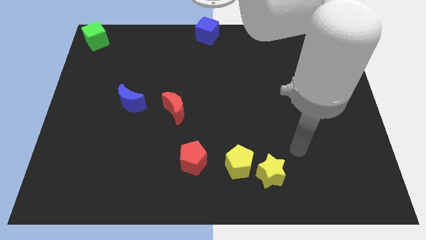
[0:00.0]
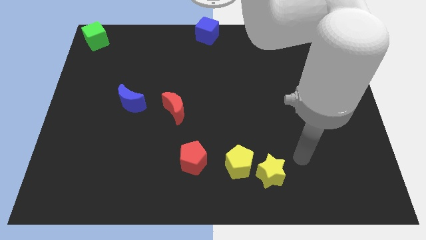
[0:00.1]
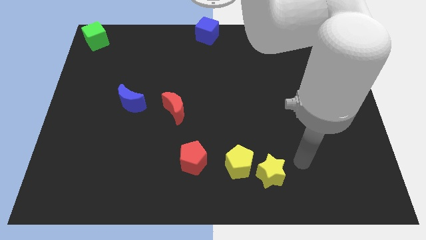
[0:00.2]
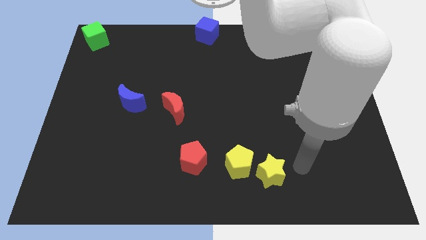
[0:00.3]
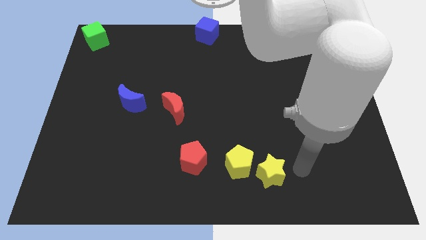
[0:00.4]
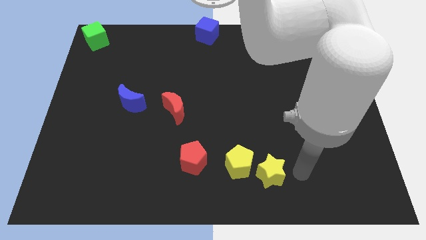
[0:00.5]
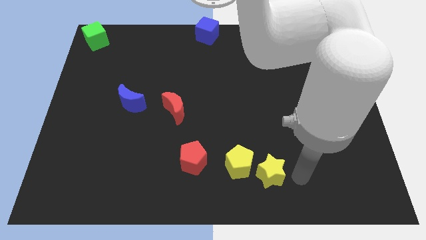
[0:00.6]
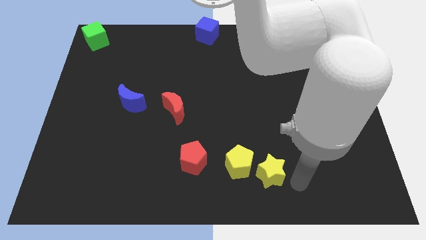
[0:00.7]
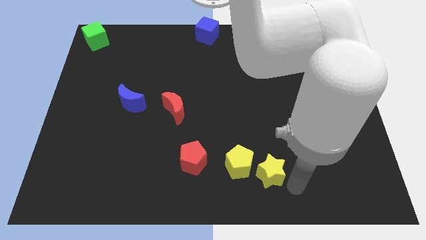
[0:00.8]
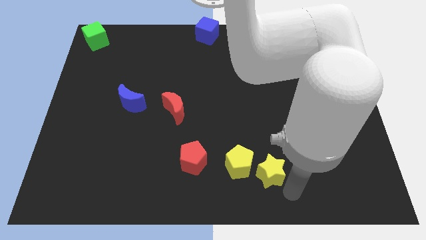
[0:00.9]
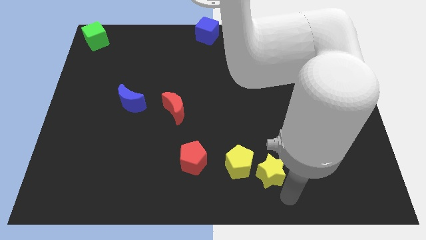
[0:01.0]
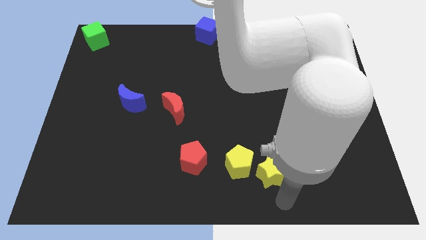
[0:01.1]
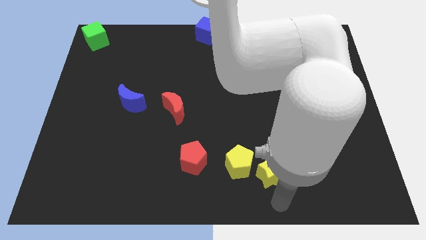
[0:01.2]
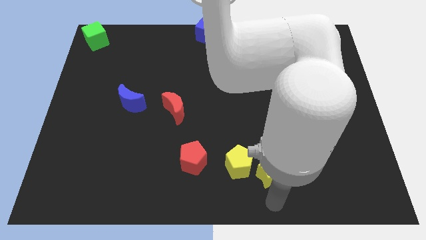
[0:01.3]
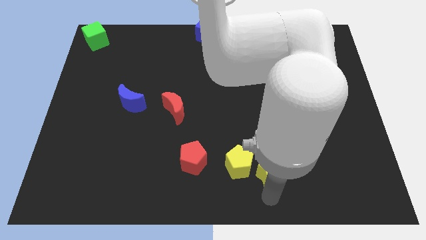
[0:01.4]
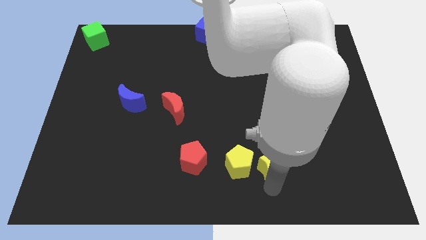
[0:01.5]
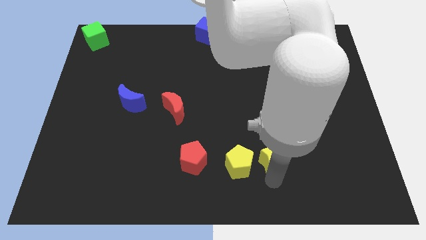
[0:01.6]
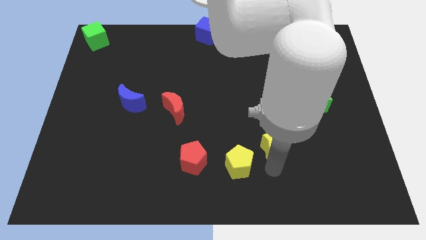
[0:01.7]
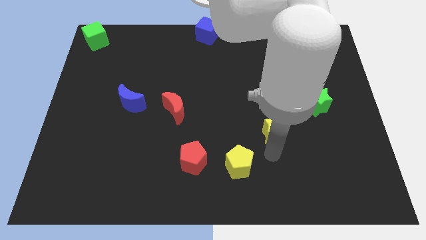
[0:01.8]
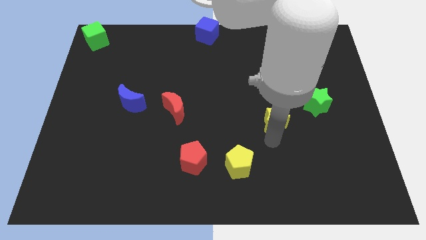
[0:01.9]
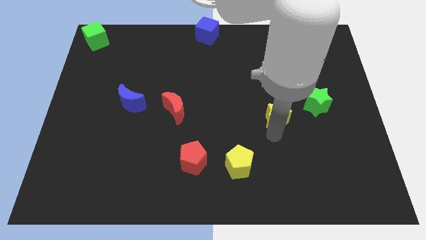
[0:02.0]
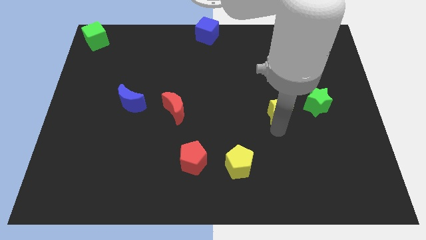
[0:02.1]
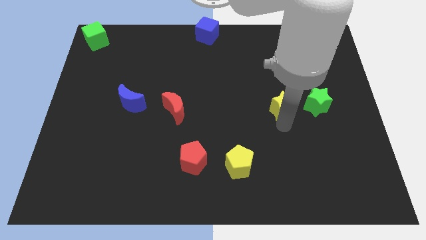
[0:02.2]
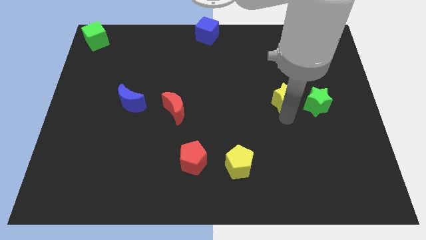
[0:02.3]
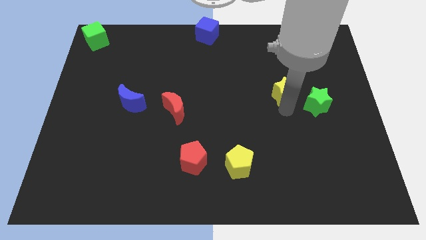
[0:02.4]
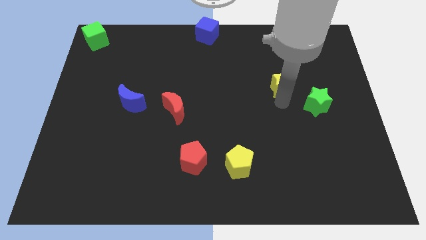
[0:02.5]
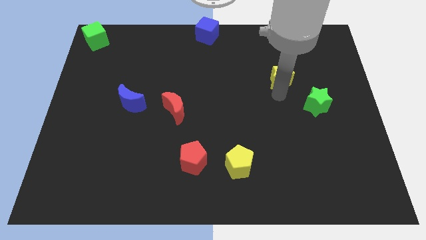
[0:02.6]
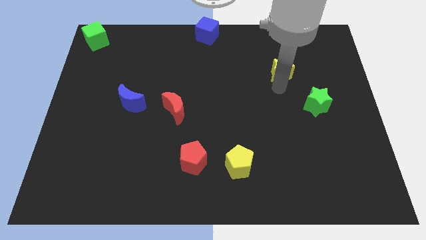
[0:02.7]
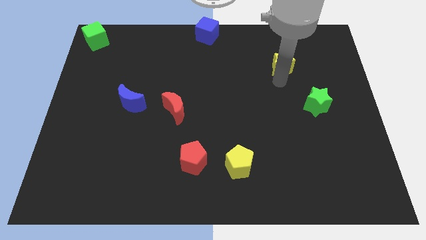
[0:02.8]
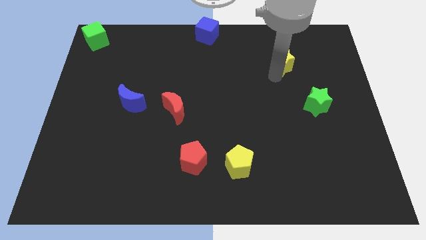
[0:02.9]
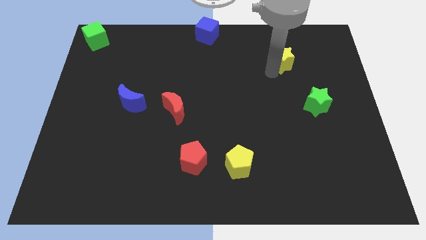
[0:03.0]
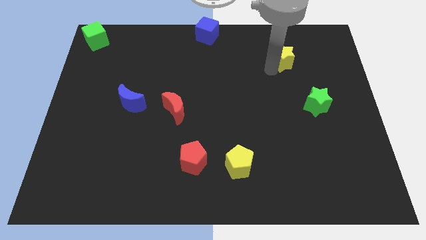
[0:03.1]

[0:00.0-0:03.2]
place the yellow star in between the blue cube and green star

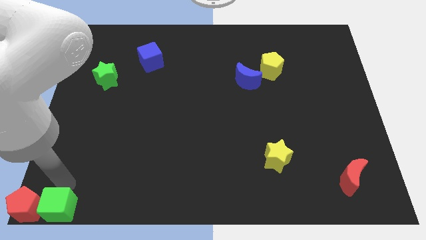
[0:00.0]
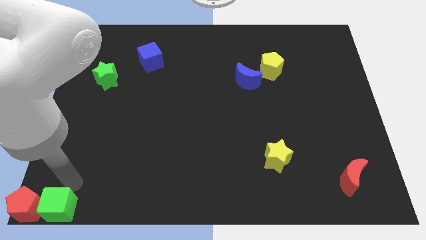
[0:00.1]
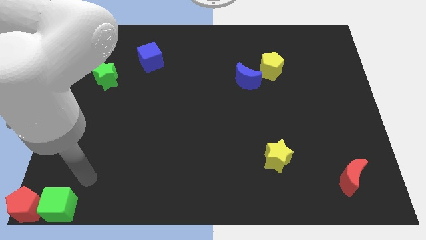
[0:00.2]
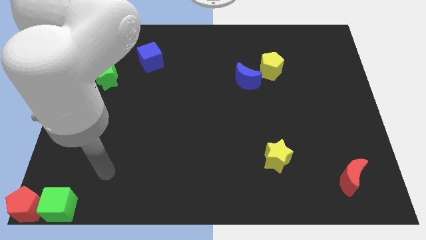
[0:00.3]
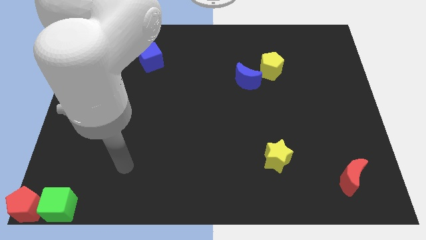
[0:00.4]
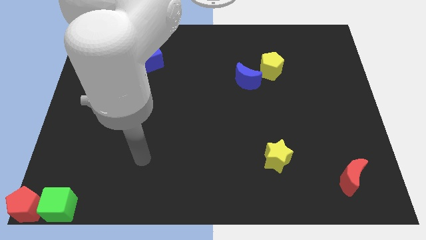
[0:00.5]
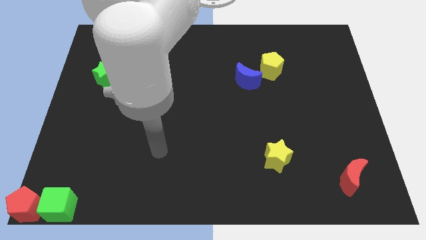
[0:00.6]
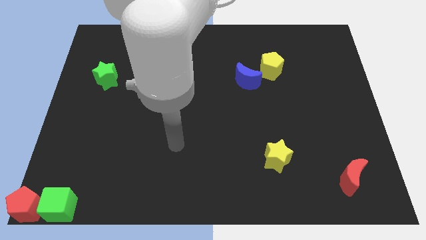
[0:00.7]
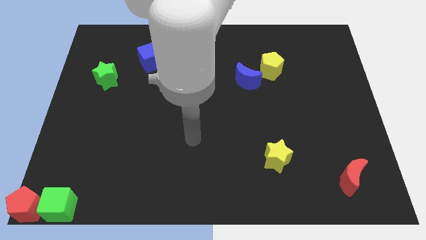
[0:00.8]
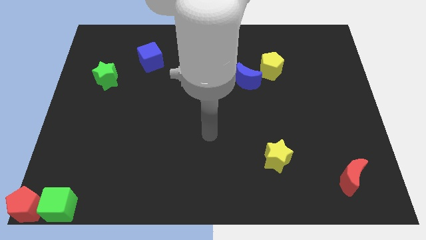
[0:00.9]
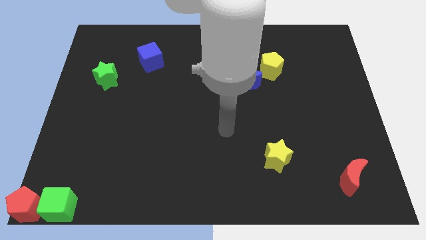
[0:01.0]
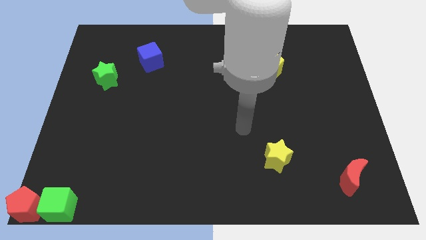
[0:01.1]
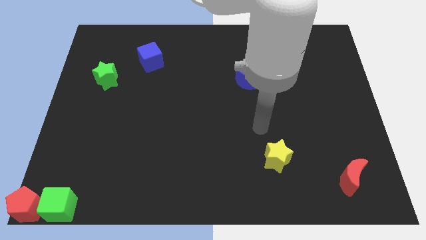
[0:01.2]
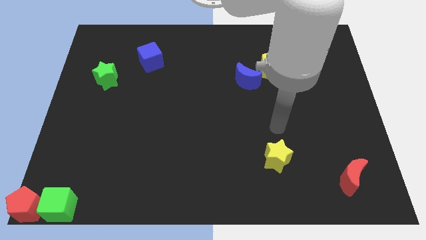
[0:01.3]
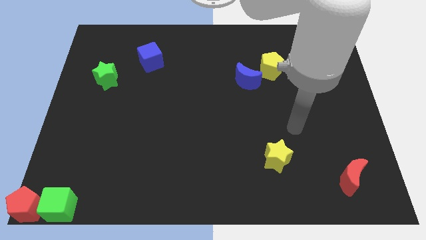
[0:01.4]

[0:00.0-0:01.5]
move your arm away from the green cube

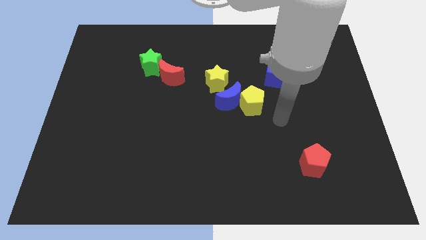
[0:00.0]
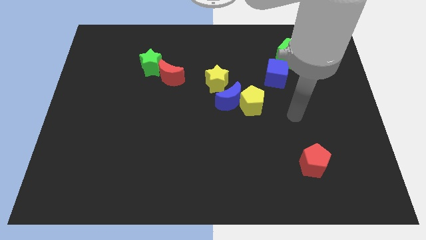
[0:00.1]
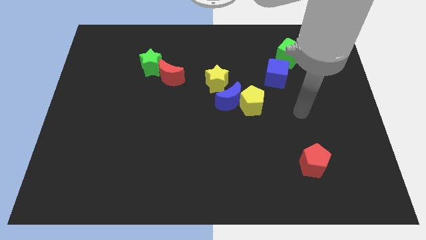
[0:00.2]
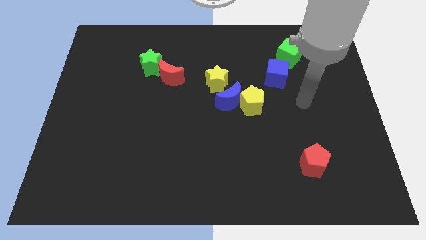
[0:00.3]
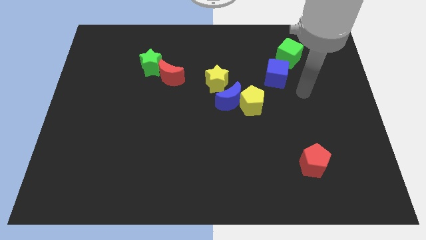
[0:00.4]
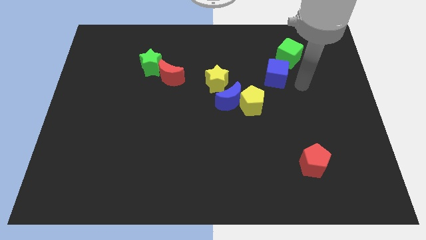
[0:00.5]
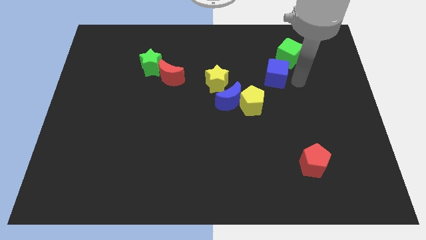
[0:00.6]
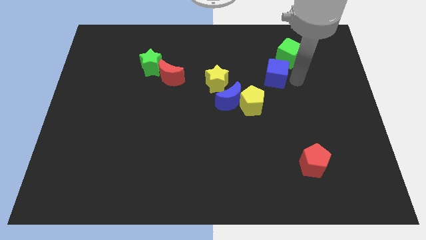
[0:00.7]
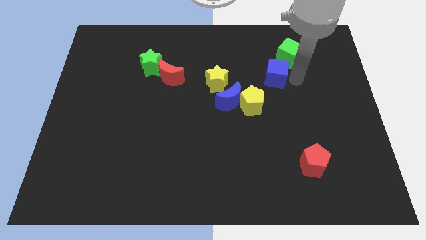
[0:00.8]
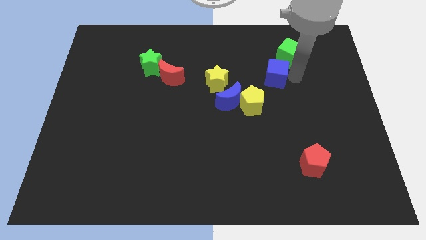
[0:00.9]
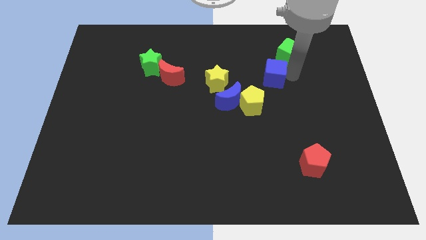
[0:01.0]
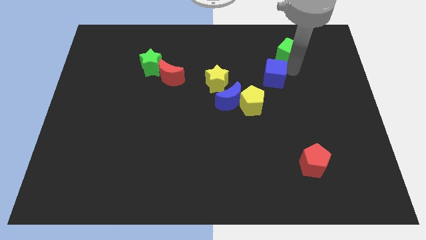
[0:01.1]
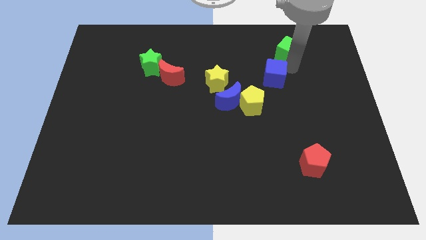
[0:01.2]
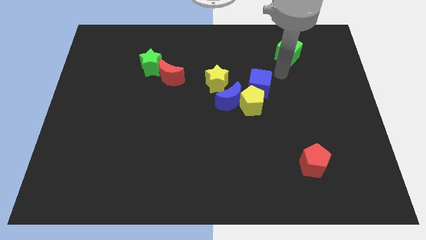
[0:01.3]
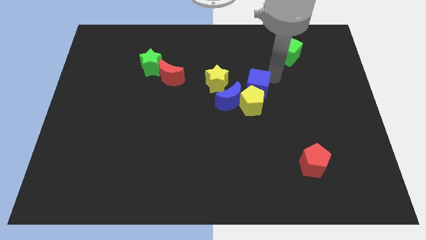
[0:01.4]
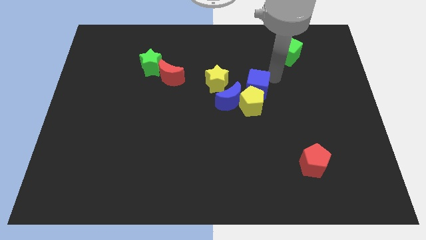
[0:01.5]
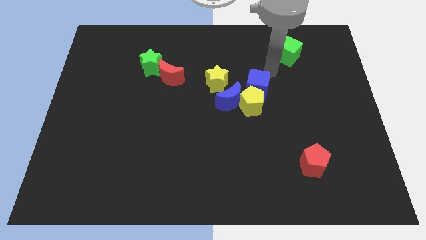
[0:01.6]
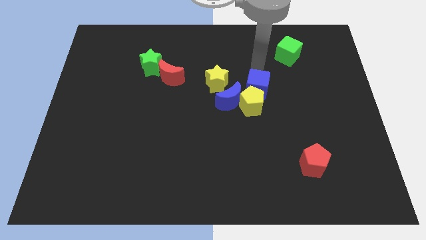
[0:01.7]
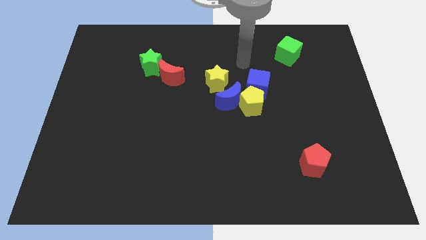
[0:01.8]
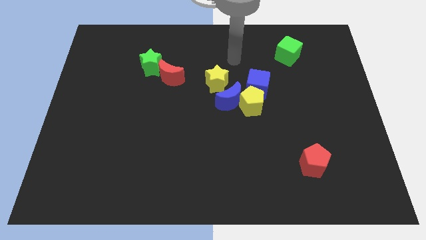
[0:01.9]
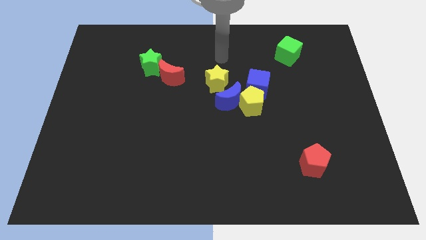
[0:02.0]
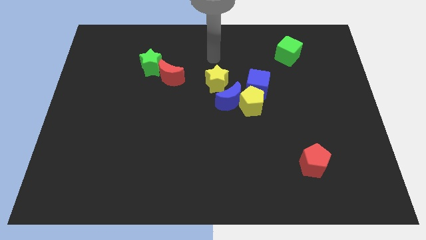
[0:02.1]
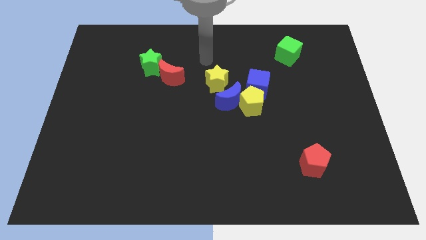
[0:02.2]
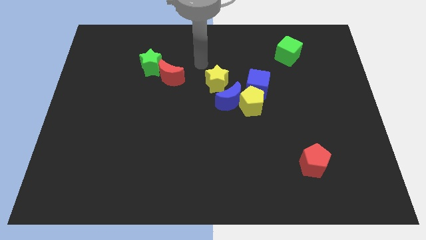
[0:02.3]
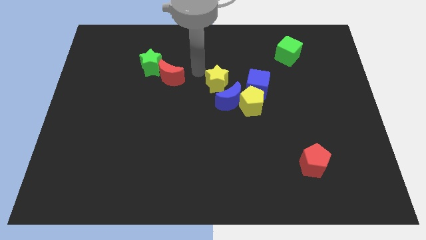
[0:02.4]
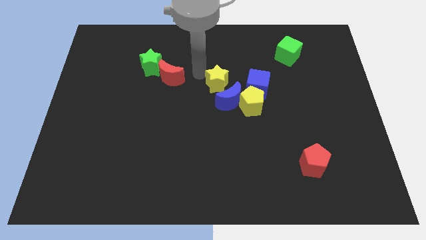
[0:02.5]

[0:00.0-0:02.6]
separate the blue cube from the green cube

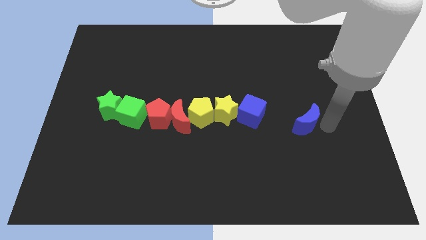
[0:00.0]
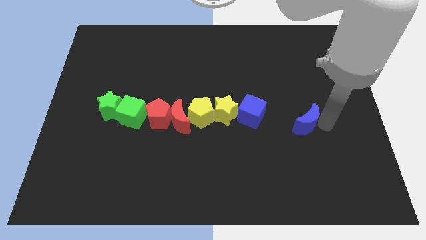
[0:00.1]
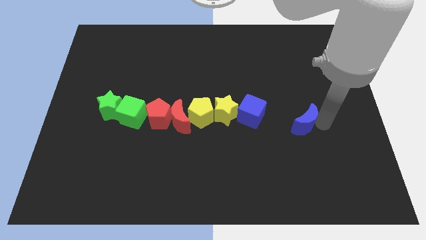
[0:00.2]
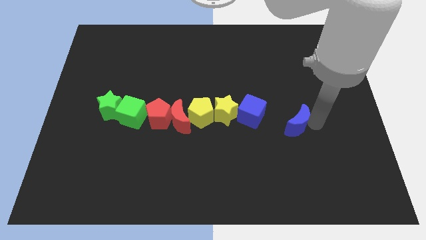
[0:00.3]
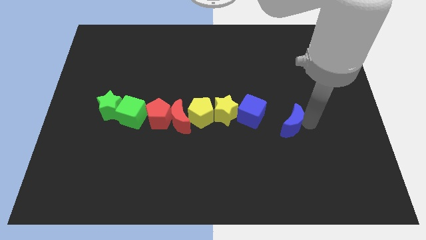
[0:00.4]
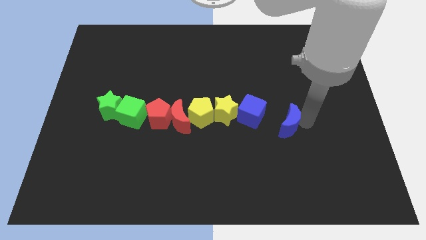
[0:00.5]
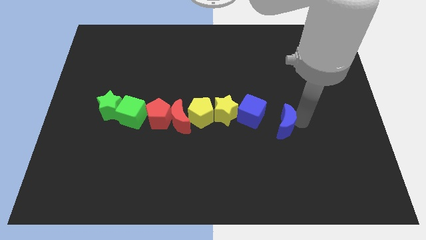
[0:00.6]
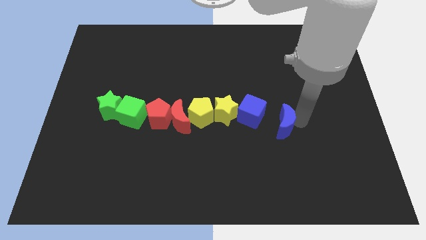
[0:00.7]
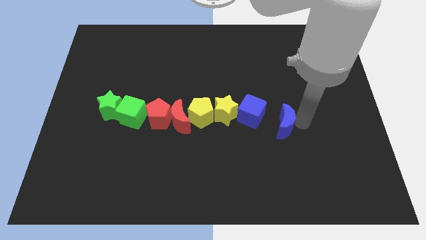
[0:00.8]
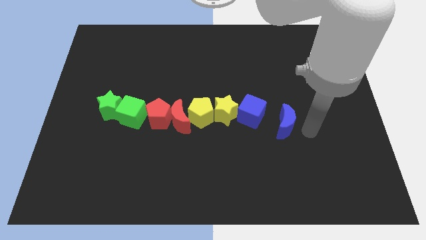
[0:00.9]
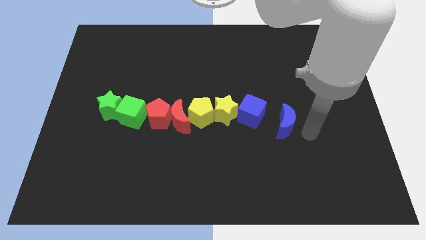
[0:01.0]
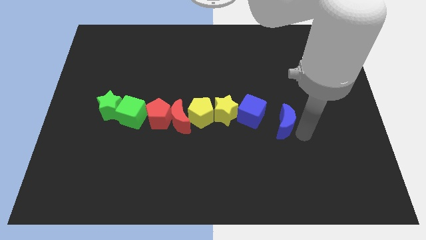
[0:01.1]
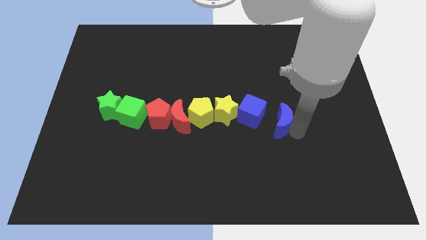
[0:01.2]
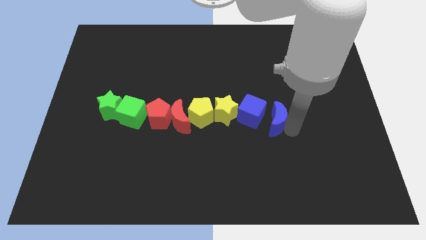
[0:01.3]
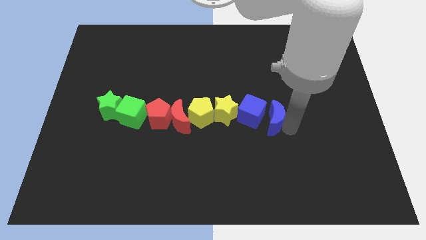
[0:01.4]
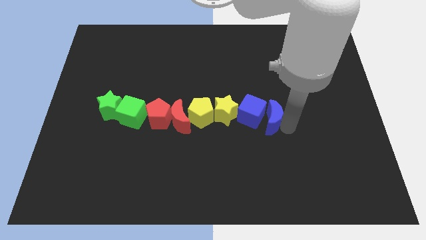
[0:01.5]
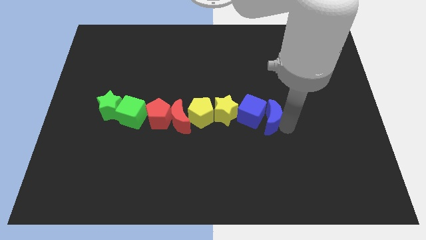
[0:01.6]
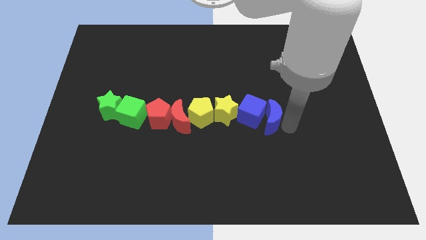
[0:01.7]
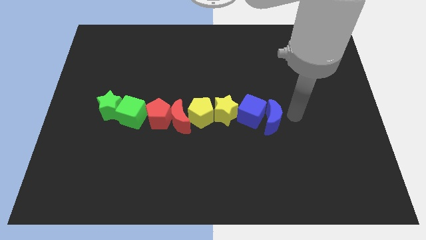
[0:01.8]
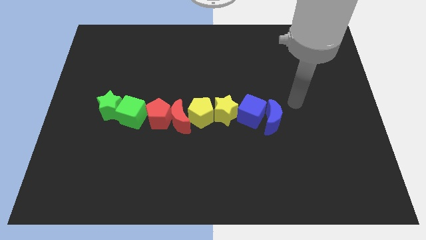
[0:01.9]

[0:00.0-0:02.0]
move the blue moon close to blue cube
